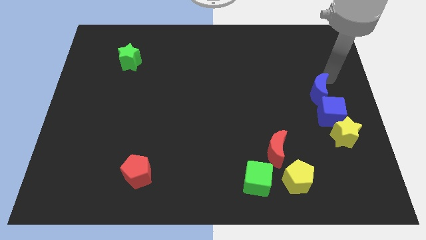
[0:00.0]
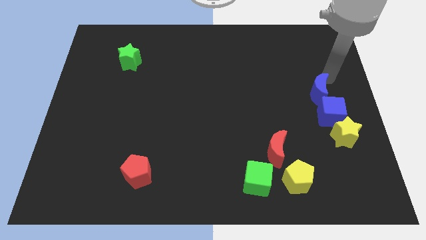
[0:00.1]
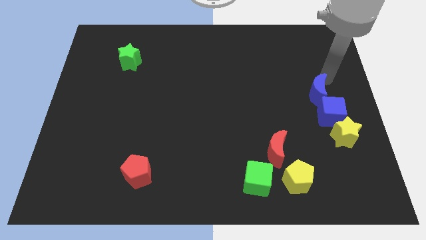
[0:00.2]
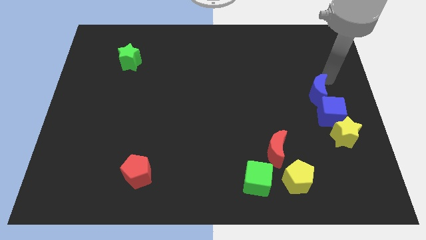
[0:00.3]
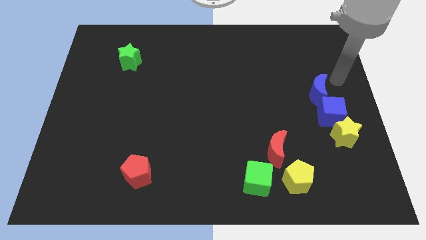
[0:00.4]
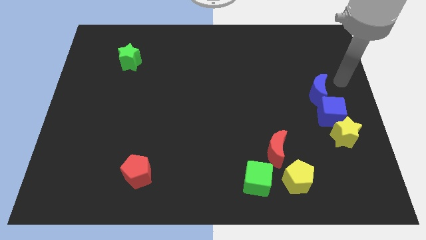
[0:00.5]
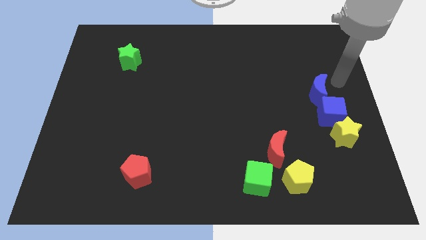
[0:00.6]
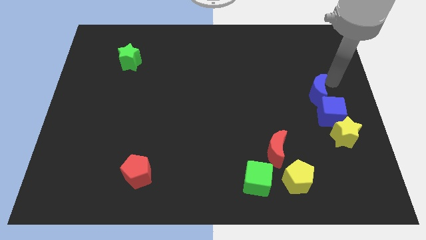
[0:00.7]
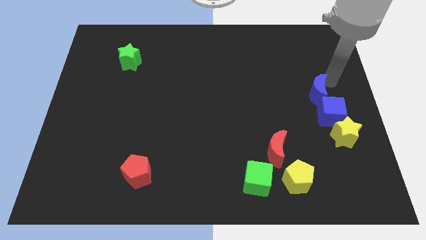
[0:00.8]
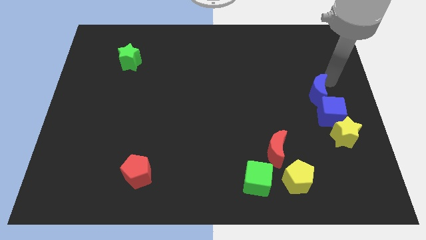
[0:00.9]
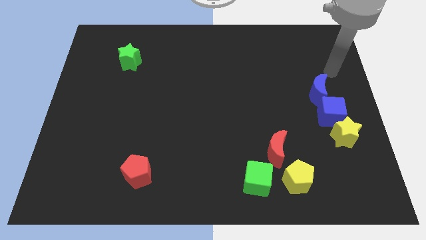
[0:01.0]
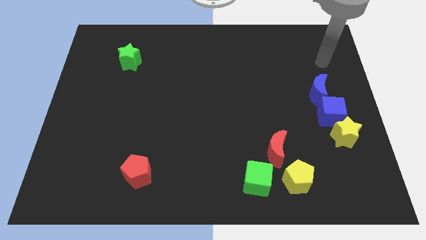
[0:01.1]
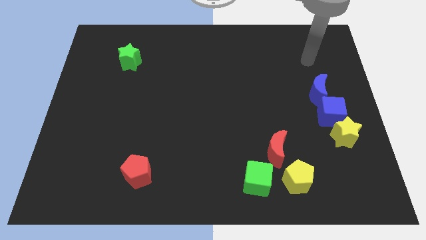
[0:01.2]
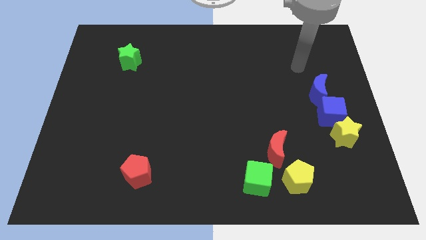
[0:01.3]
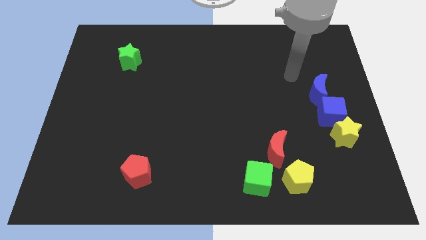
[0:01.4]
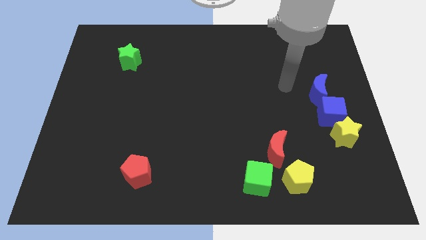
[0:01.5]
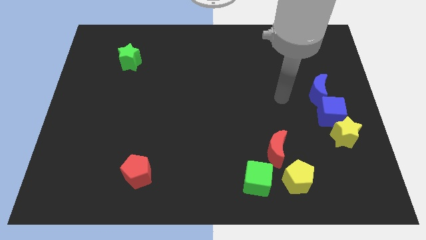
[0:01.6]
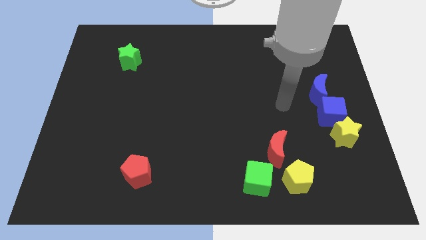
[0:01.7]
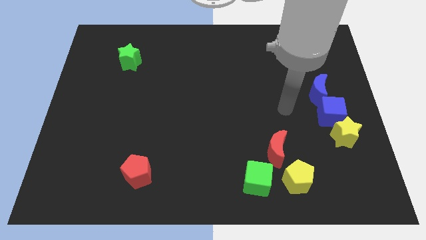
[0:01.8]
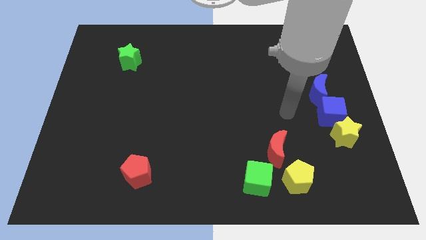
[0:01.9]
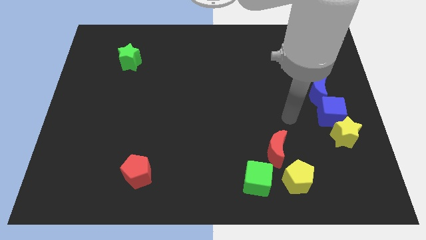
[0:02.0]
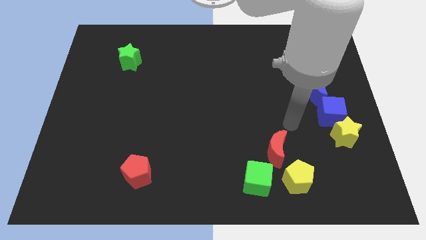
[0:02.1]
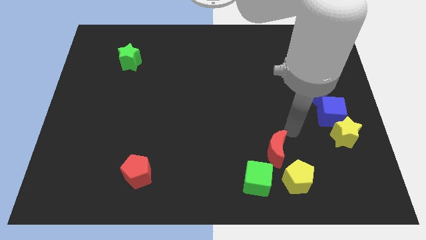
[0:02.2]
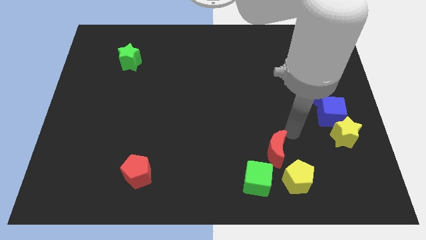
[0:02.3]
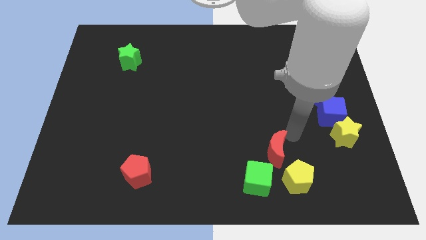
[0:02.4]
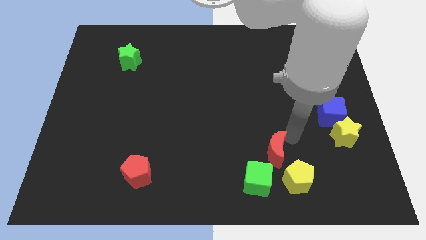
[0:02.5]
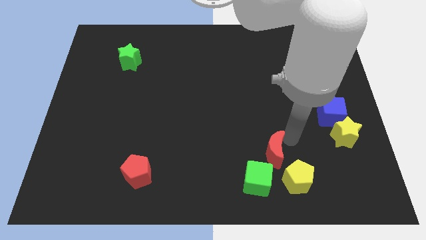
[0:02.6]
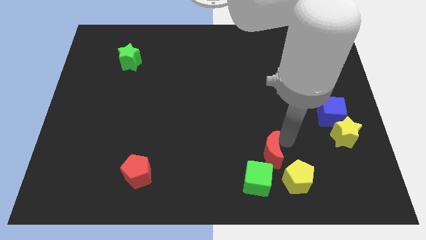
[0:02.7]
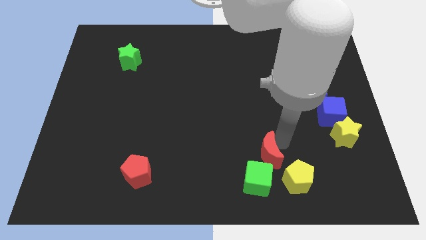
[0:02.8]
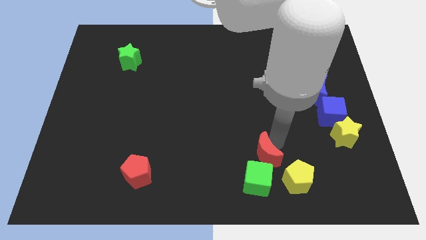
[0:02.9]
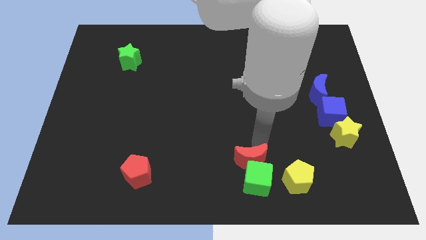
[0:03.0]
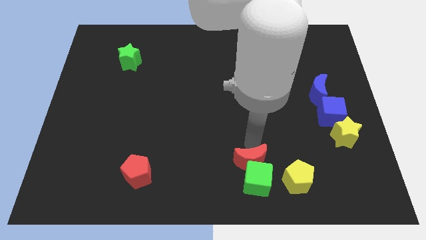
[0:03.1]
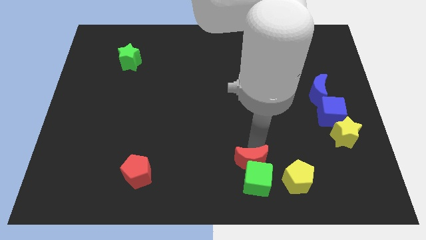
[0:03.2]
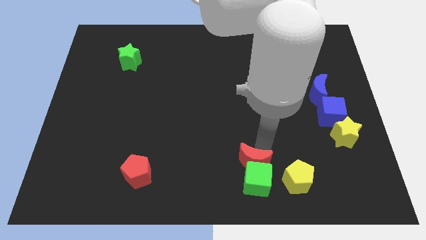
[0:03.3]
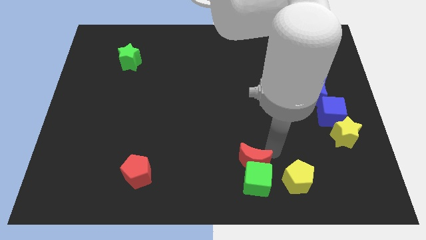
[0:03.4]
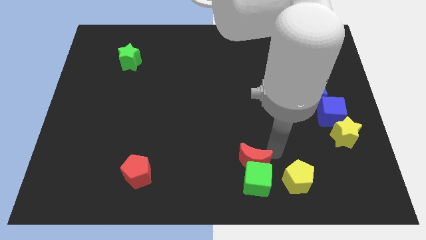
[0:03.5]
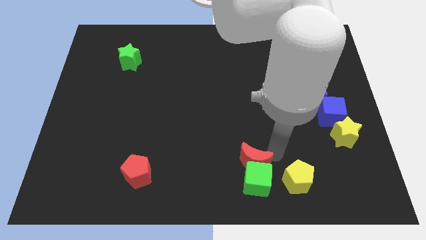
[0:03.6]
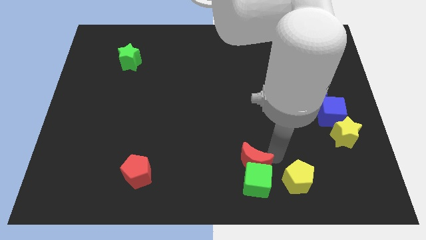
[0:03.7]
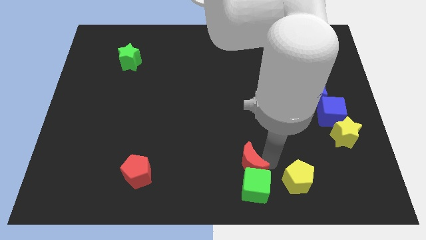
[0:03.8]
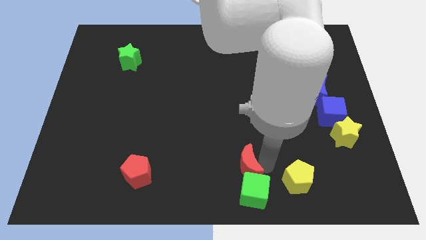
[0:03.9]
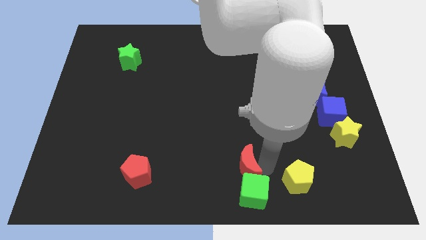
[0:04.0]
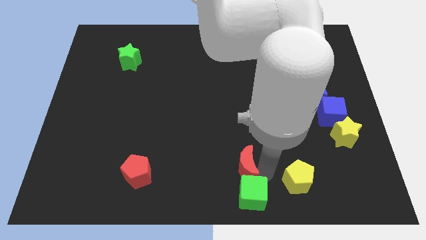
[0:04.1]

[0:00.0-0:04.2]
push the red moon into the green cube

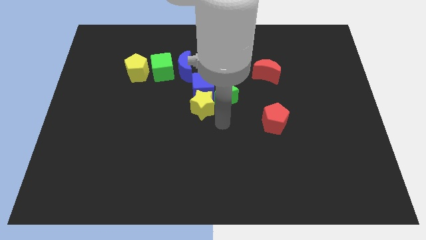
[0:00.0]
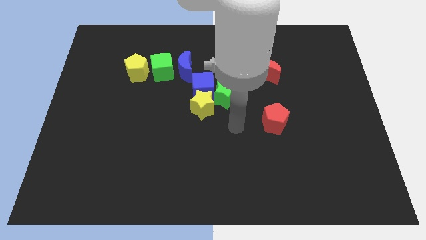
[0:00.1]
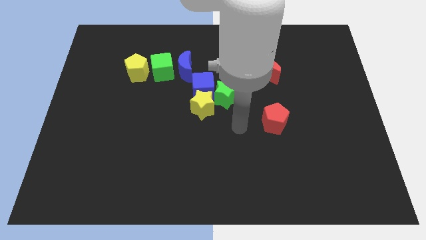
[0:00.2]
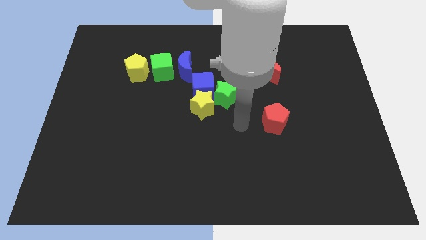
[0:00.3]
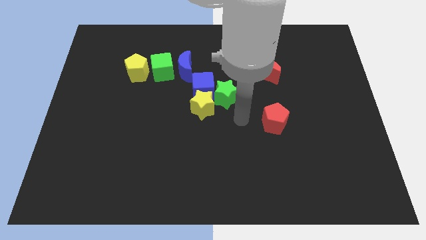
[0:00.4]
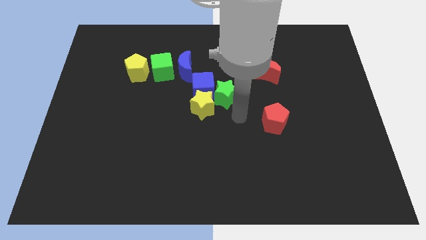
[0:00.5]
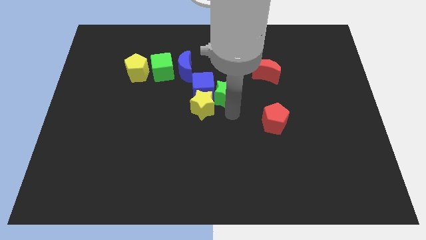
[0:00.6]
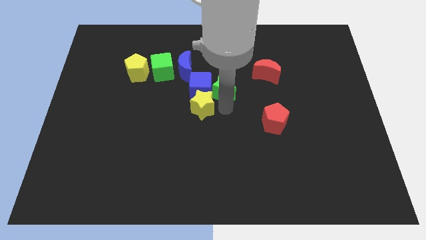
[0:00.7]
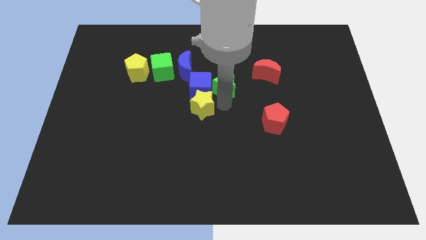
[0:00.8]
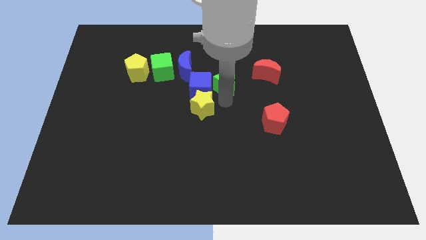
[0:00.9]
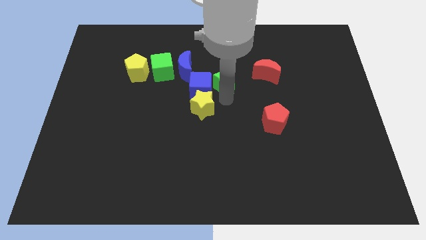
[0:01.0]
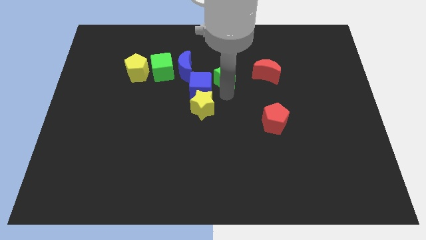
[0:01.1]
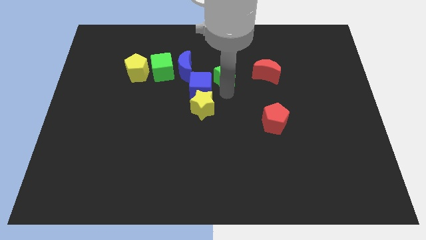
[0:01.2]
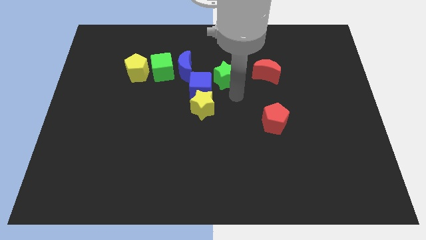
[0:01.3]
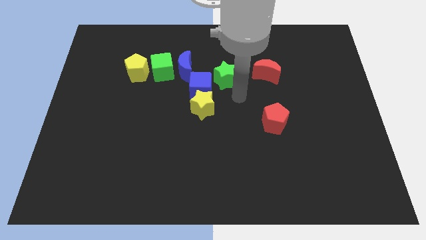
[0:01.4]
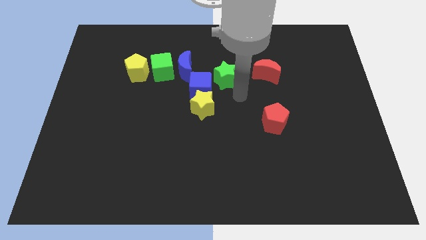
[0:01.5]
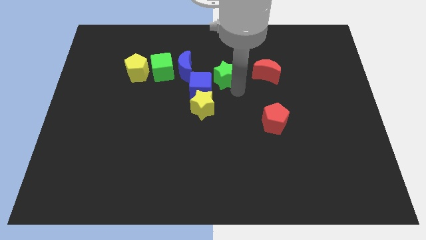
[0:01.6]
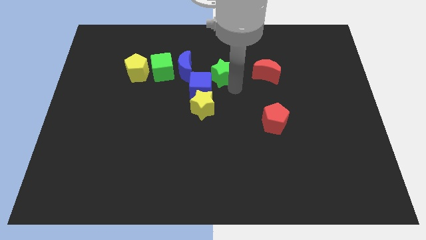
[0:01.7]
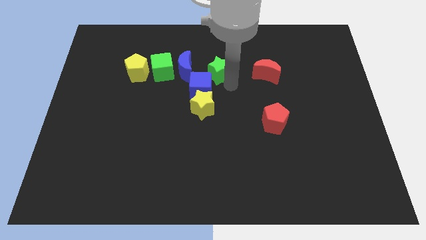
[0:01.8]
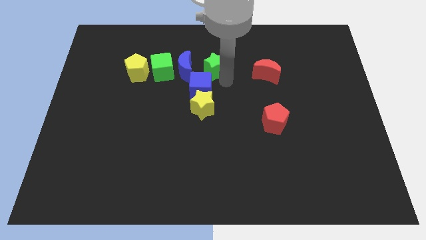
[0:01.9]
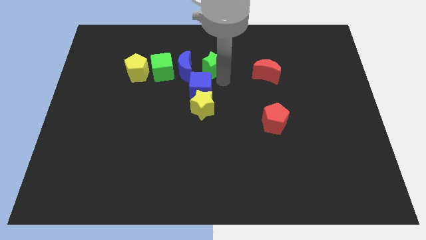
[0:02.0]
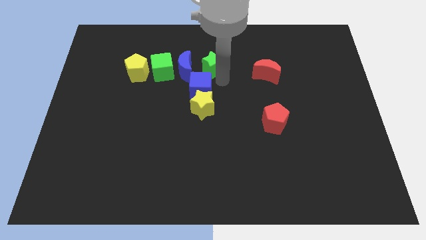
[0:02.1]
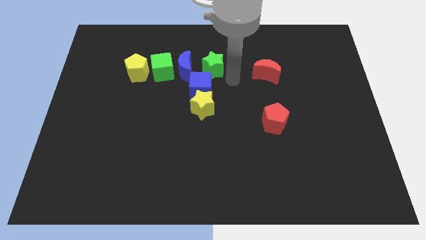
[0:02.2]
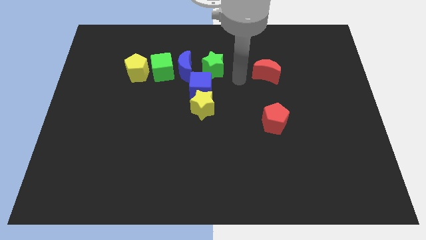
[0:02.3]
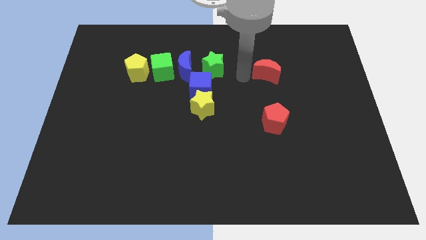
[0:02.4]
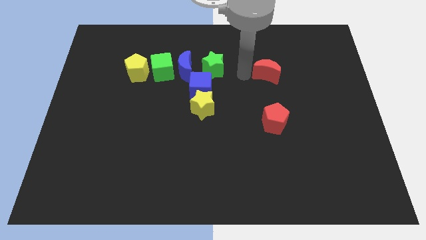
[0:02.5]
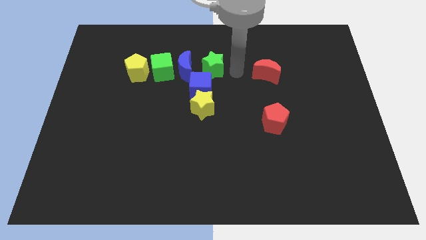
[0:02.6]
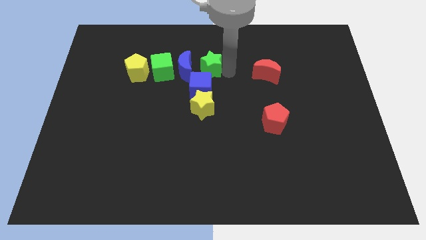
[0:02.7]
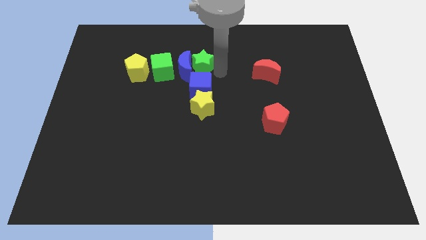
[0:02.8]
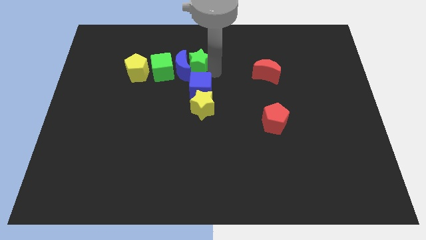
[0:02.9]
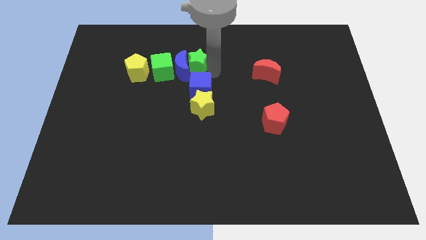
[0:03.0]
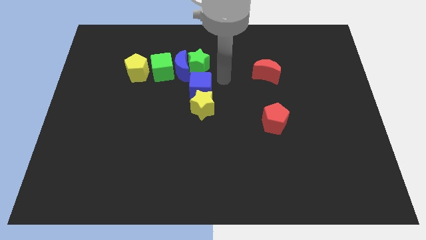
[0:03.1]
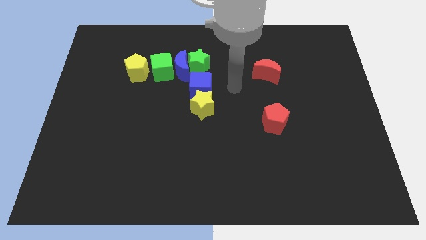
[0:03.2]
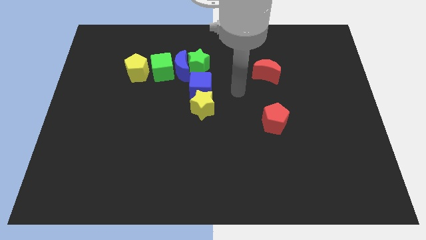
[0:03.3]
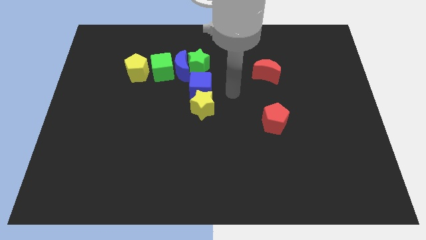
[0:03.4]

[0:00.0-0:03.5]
push the green star into the blue crescent at the center of the board

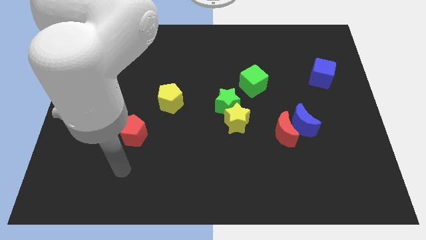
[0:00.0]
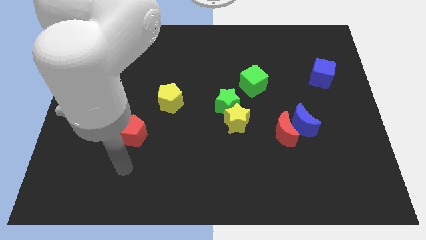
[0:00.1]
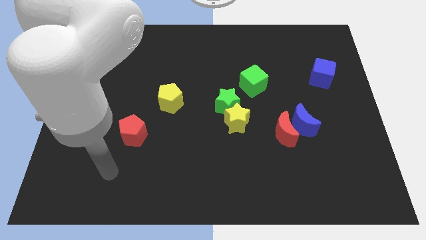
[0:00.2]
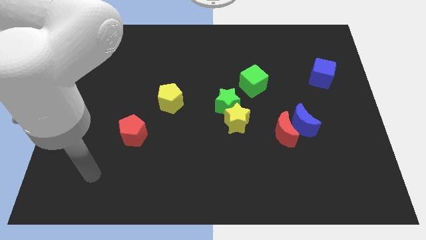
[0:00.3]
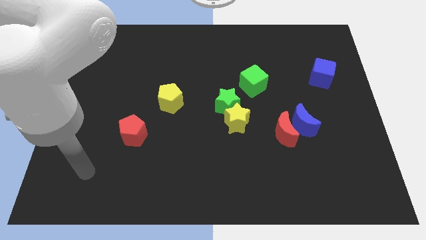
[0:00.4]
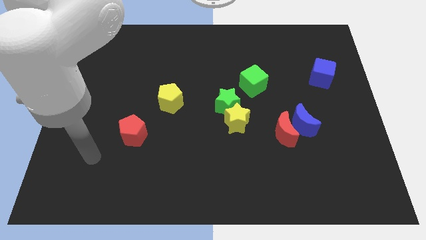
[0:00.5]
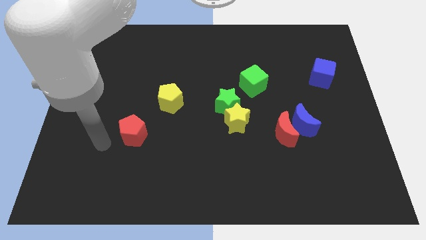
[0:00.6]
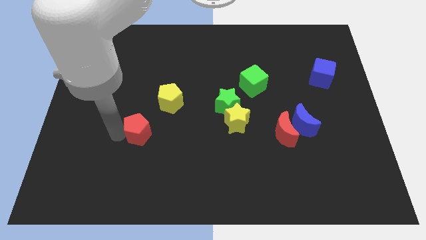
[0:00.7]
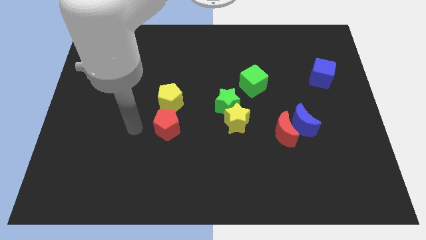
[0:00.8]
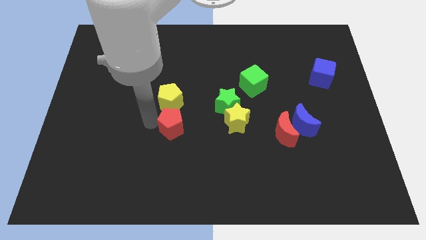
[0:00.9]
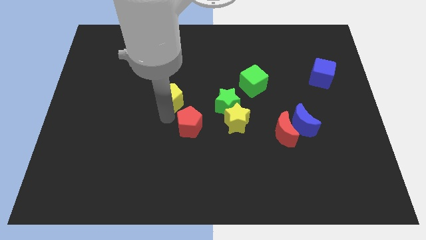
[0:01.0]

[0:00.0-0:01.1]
move red pentagon to the left of yellow star

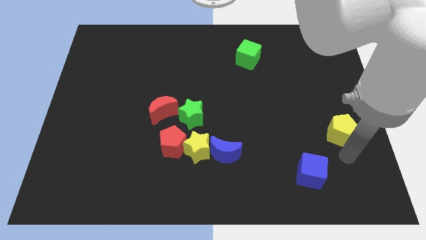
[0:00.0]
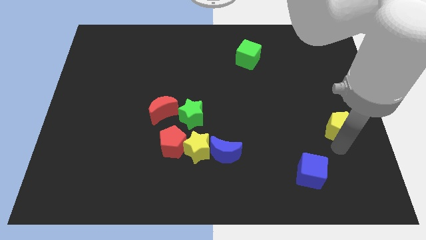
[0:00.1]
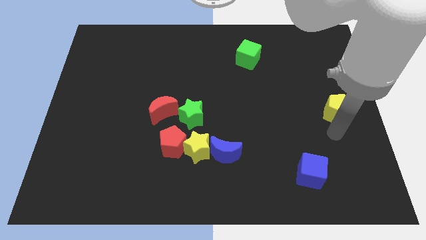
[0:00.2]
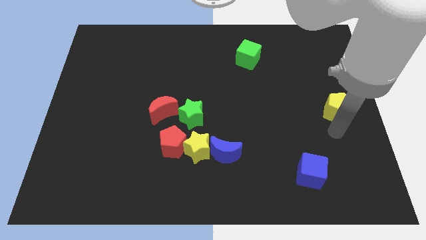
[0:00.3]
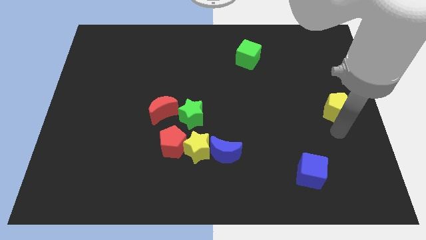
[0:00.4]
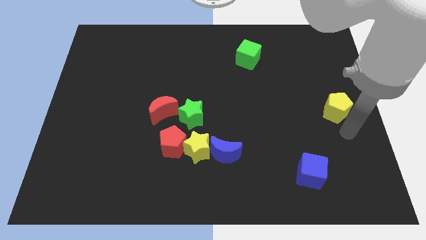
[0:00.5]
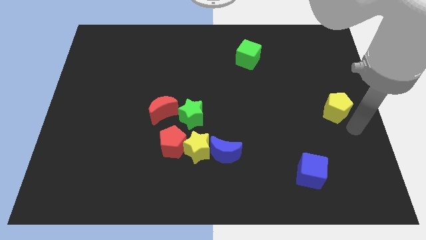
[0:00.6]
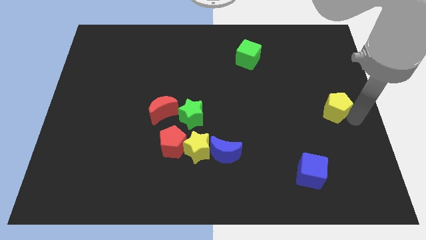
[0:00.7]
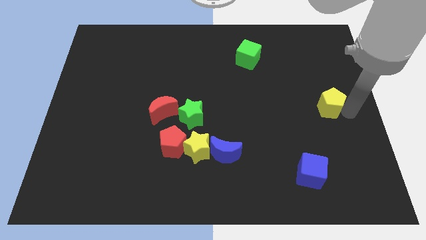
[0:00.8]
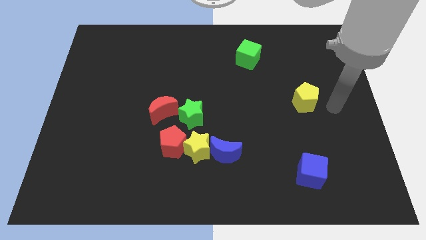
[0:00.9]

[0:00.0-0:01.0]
place the yellow pentagon vertically above the blue cube
